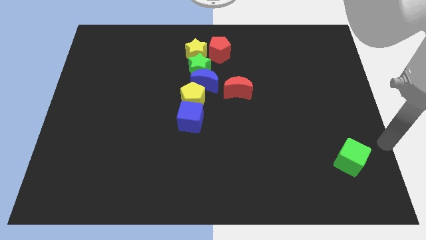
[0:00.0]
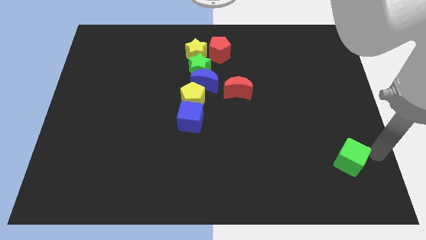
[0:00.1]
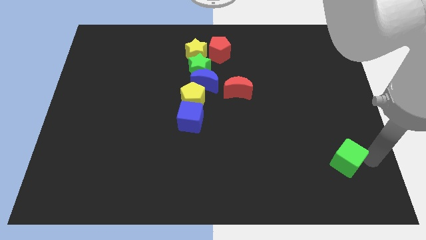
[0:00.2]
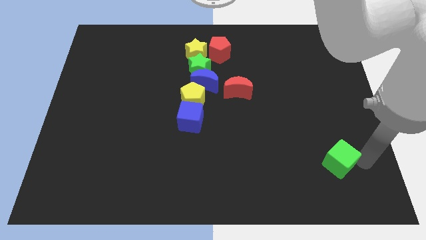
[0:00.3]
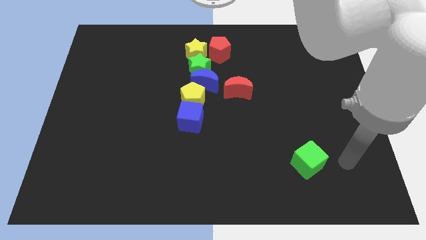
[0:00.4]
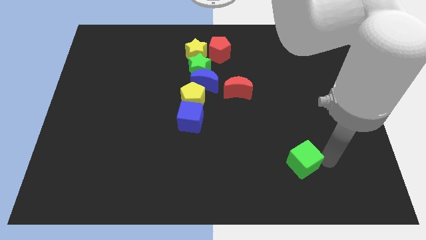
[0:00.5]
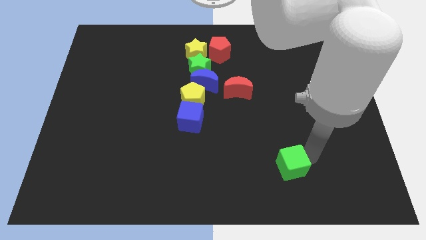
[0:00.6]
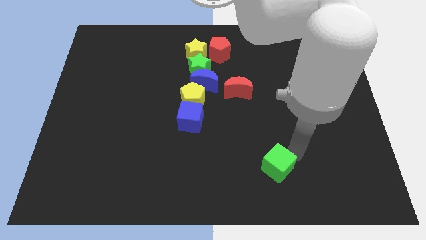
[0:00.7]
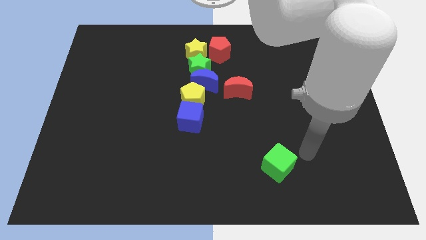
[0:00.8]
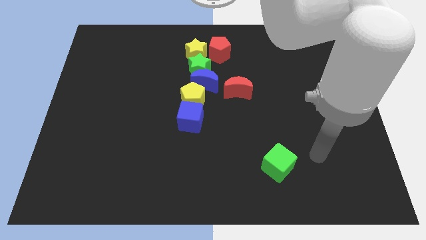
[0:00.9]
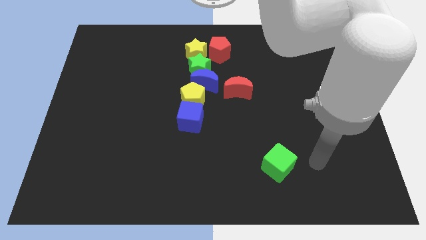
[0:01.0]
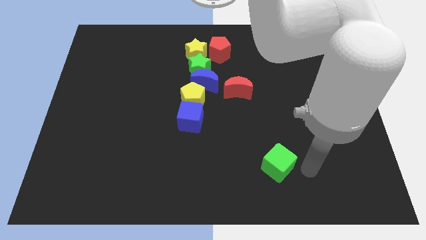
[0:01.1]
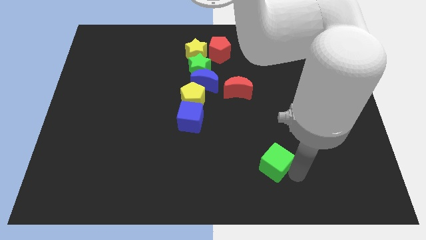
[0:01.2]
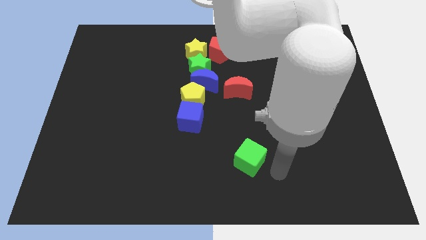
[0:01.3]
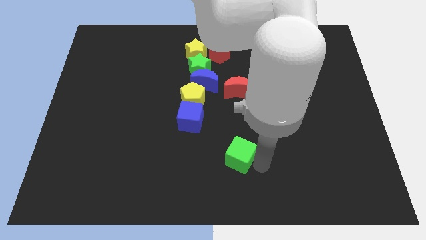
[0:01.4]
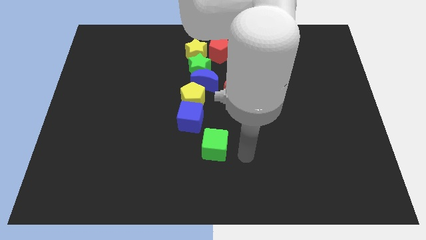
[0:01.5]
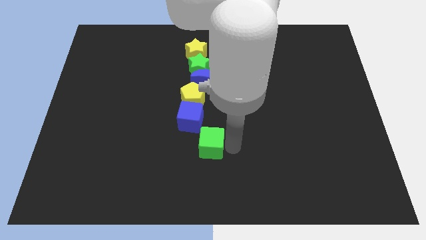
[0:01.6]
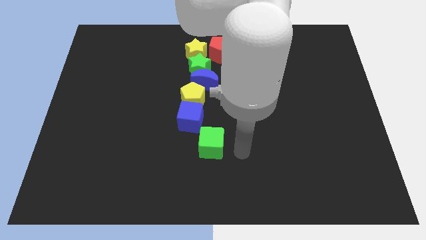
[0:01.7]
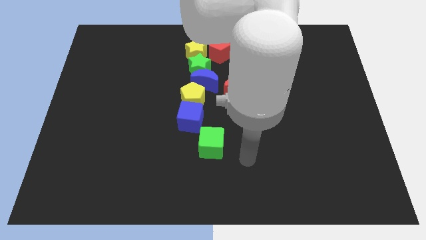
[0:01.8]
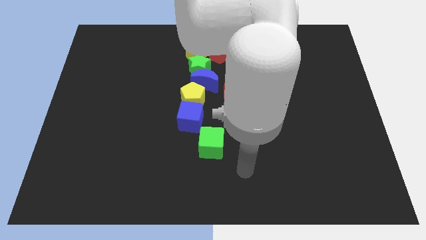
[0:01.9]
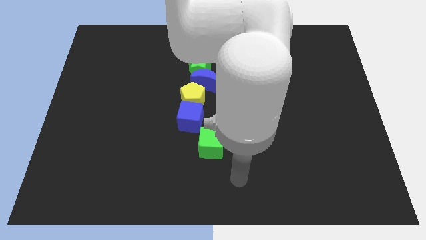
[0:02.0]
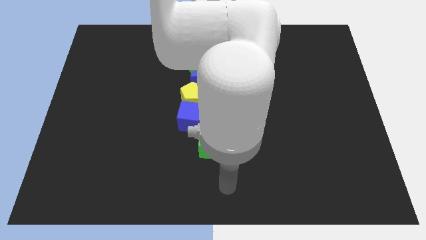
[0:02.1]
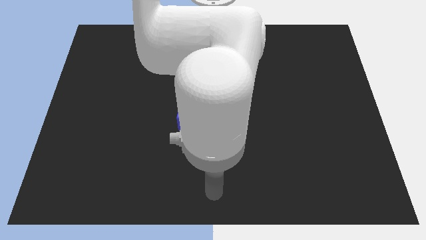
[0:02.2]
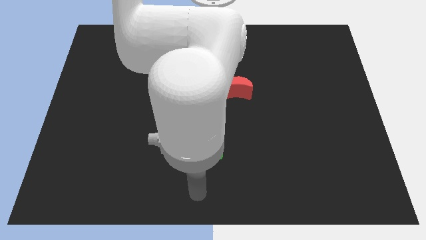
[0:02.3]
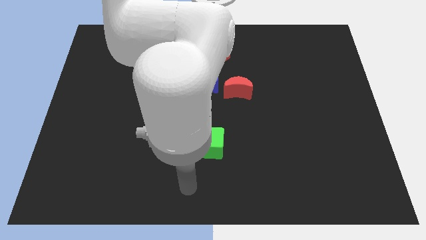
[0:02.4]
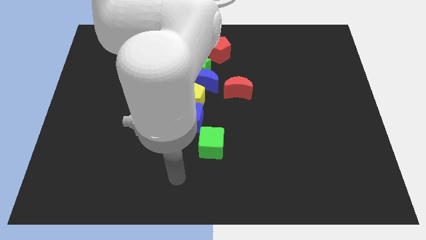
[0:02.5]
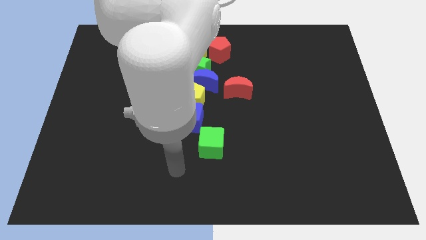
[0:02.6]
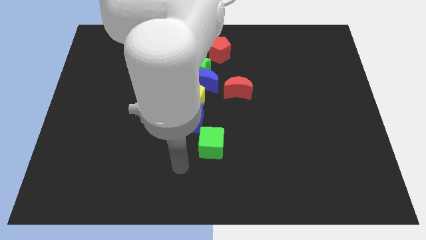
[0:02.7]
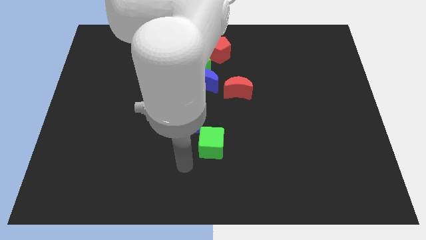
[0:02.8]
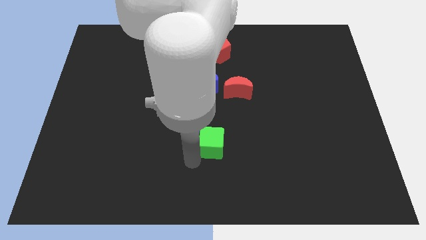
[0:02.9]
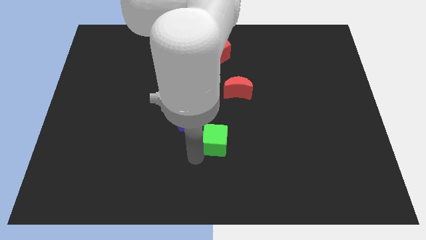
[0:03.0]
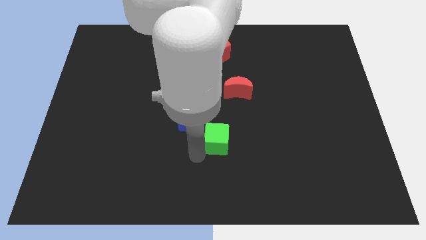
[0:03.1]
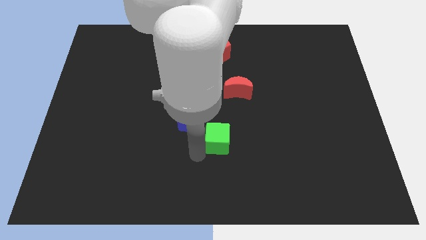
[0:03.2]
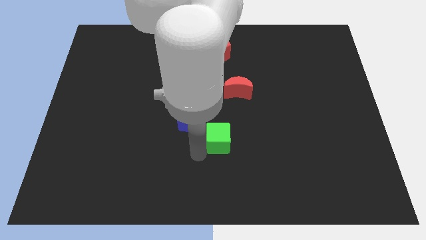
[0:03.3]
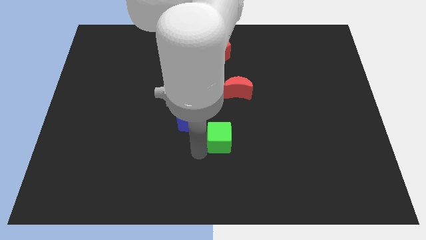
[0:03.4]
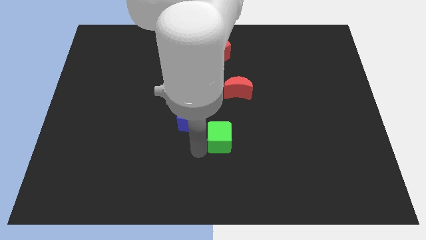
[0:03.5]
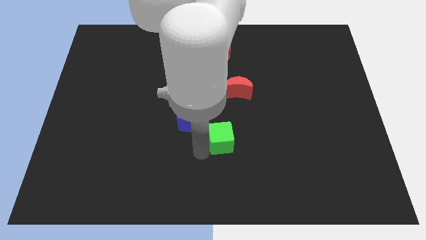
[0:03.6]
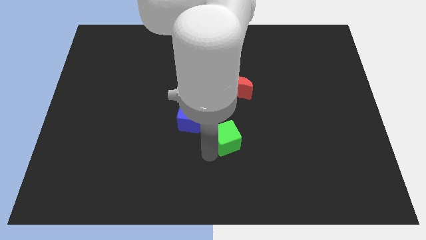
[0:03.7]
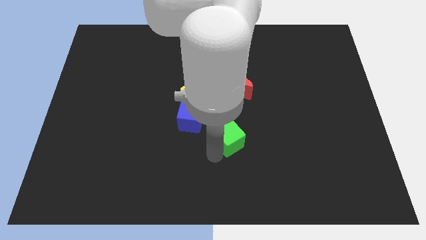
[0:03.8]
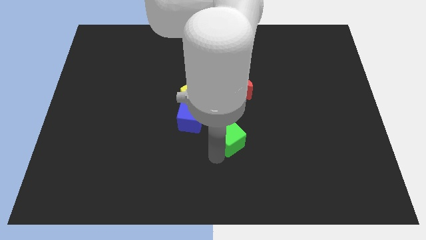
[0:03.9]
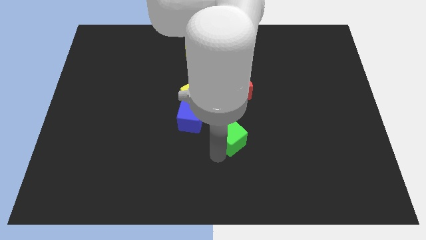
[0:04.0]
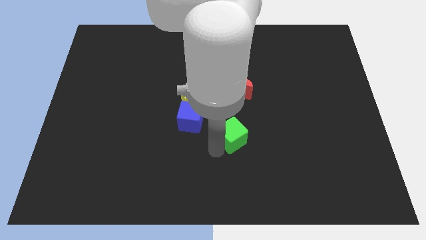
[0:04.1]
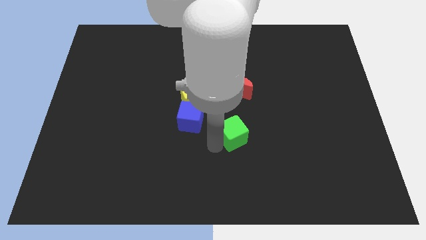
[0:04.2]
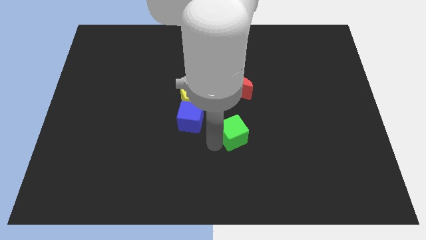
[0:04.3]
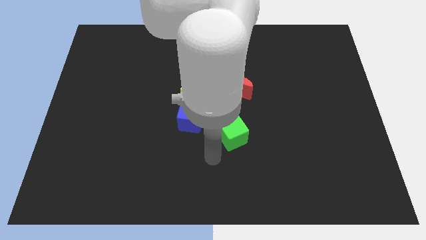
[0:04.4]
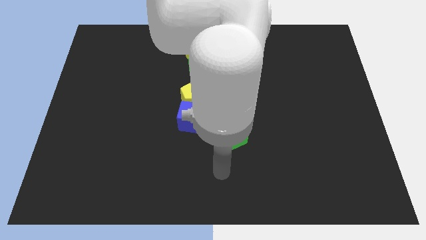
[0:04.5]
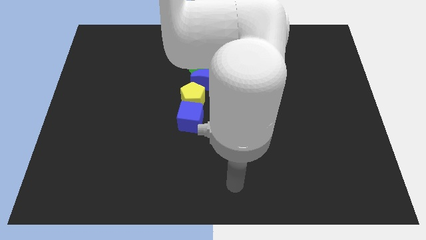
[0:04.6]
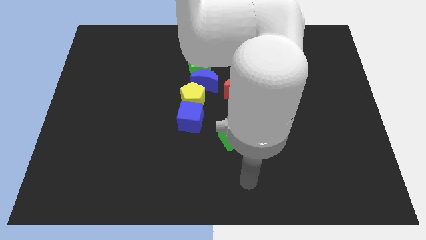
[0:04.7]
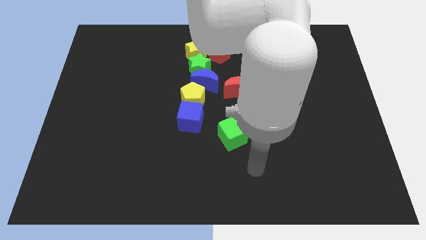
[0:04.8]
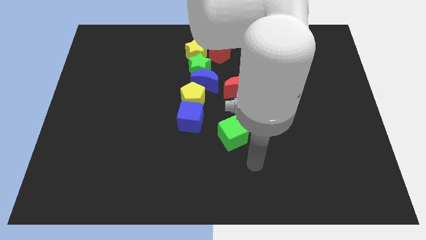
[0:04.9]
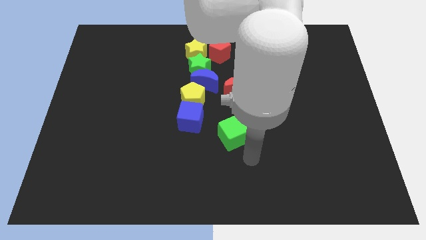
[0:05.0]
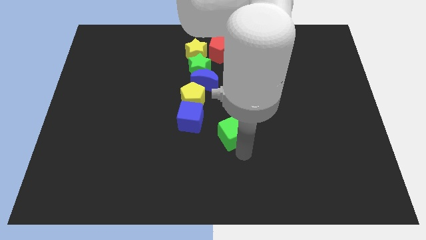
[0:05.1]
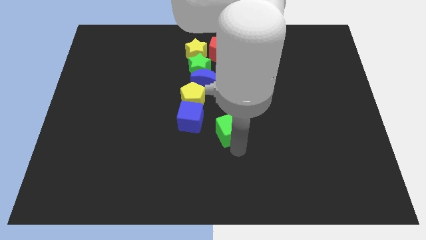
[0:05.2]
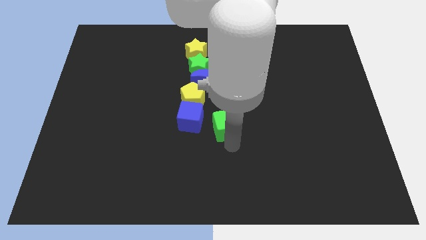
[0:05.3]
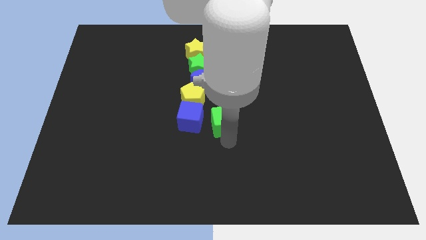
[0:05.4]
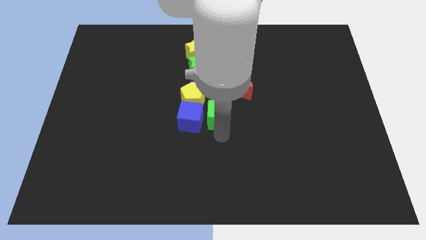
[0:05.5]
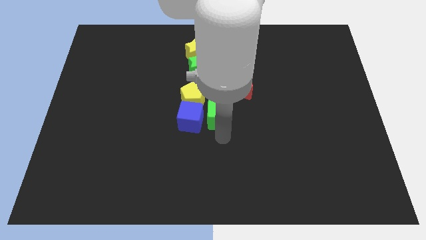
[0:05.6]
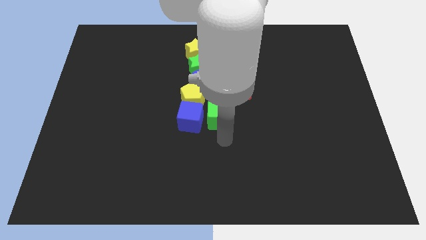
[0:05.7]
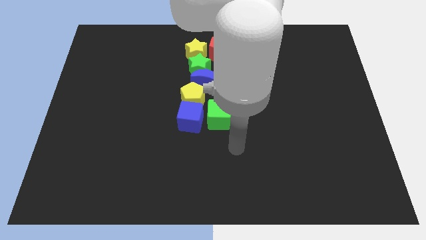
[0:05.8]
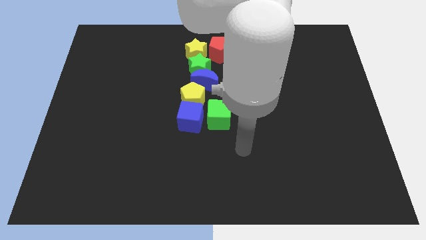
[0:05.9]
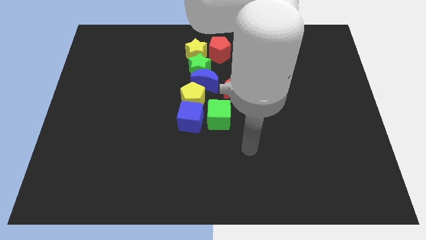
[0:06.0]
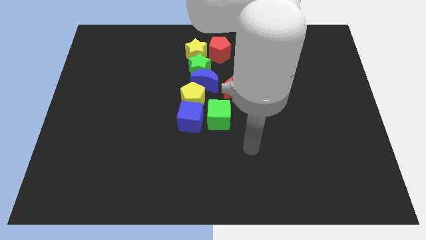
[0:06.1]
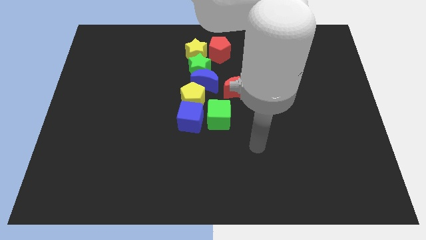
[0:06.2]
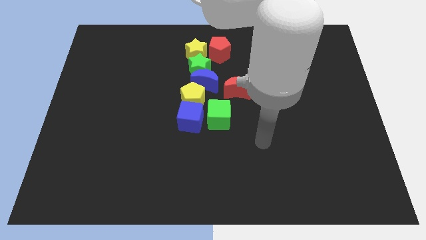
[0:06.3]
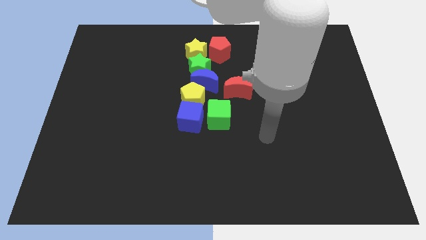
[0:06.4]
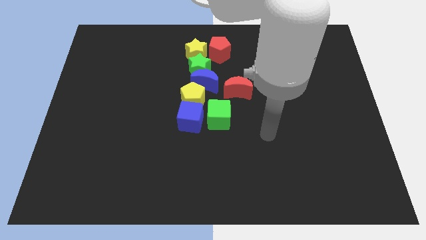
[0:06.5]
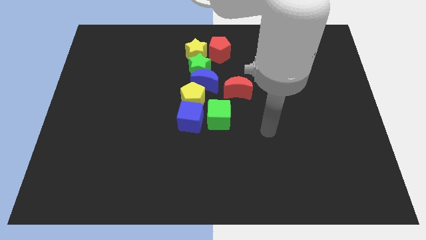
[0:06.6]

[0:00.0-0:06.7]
move green cube beside blue cube

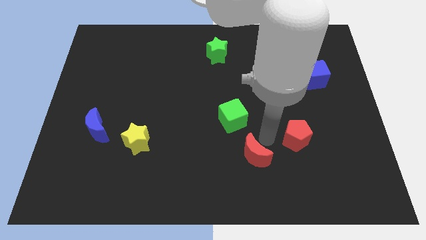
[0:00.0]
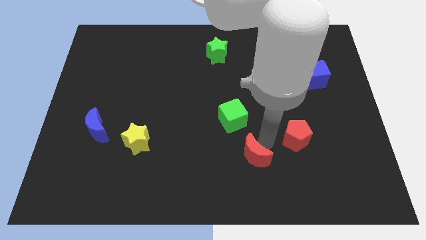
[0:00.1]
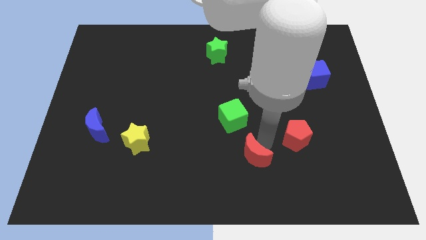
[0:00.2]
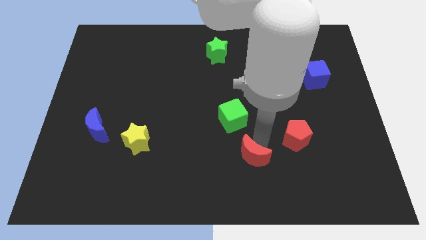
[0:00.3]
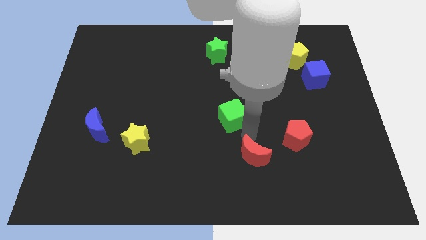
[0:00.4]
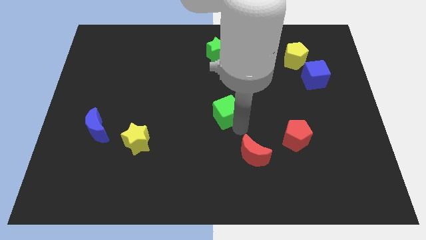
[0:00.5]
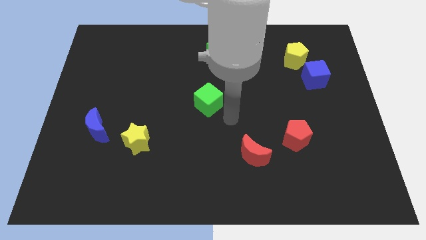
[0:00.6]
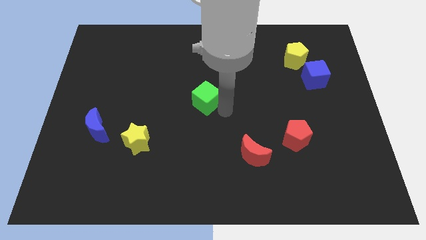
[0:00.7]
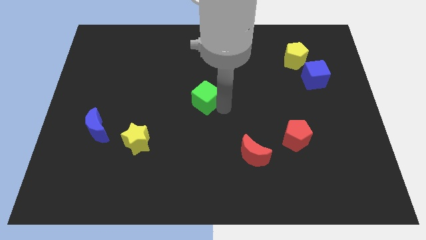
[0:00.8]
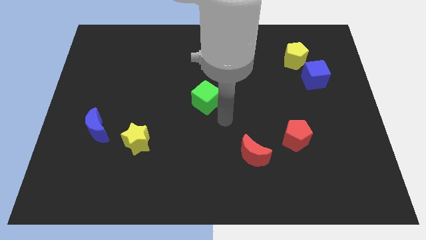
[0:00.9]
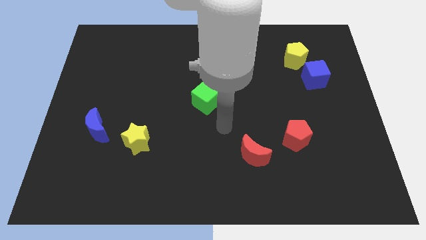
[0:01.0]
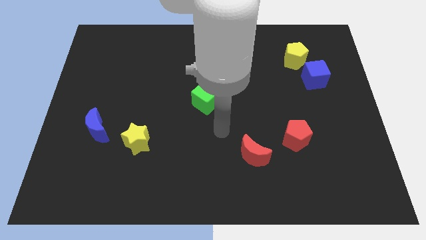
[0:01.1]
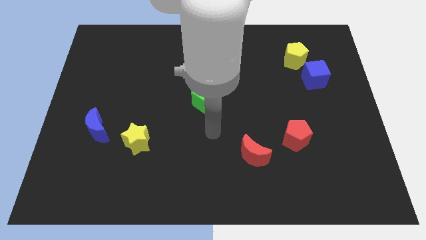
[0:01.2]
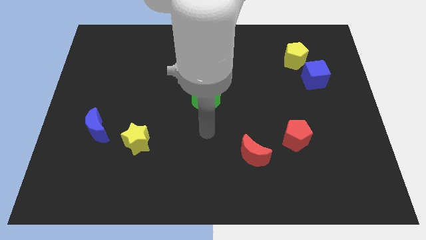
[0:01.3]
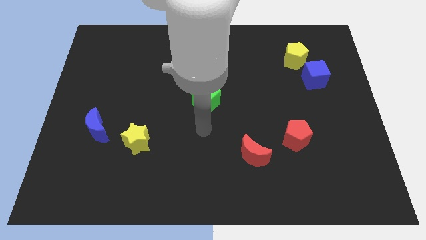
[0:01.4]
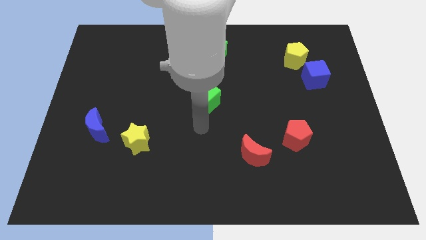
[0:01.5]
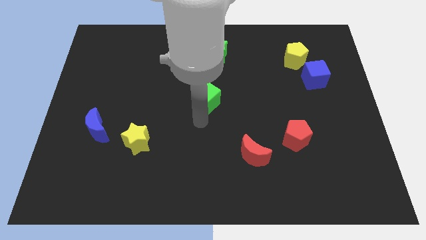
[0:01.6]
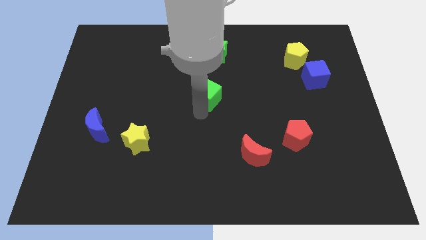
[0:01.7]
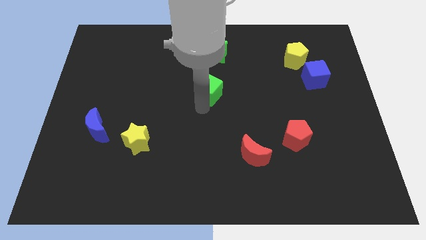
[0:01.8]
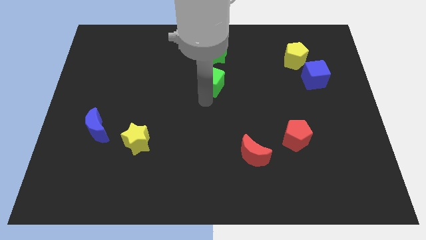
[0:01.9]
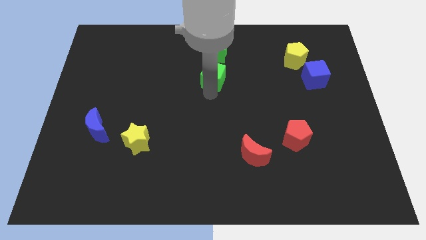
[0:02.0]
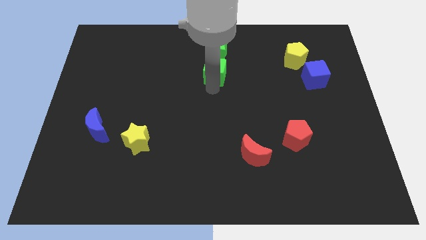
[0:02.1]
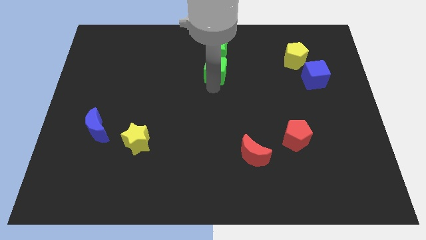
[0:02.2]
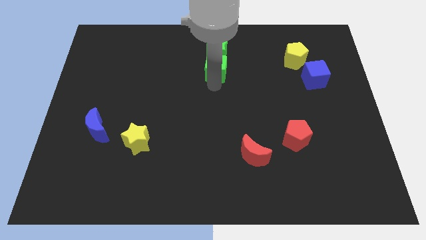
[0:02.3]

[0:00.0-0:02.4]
place the green cube into green star
